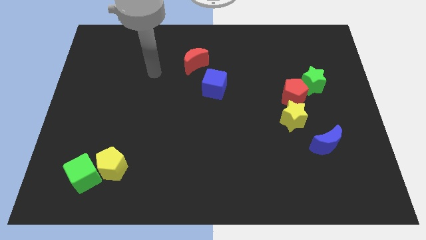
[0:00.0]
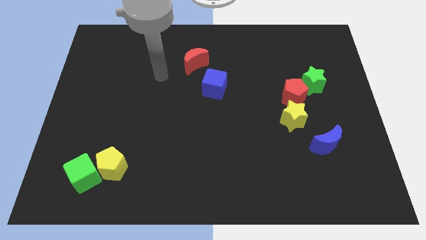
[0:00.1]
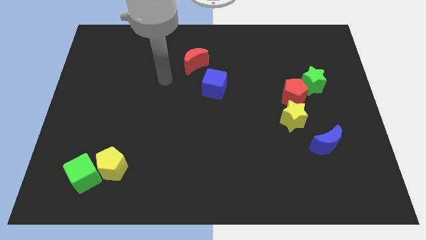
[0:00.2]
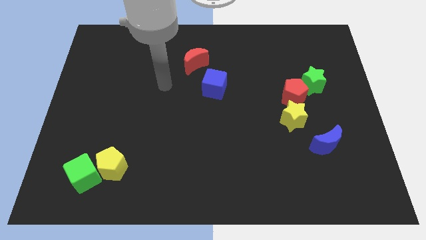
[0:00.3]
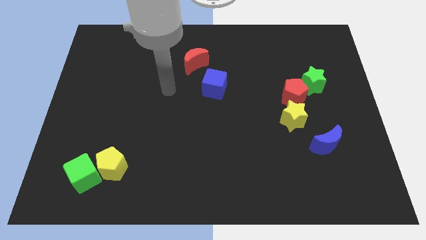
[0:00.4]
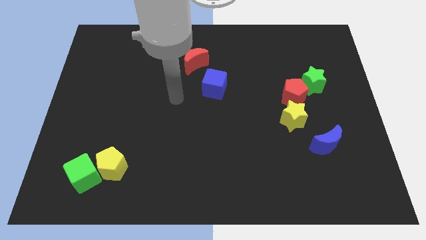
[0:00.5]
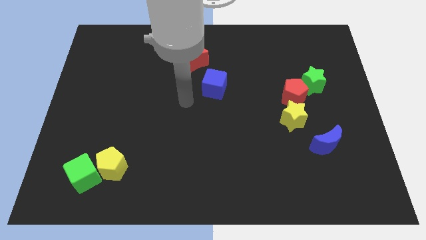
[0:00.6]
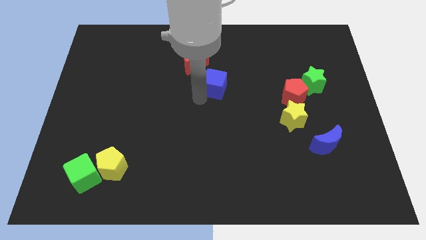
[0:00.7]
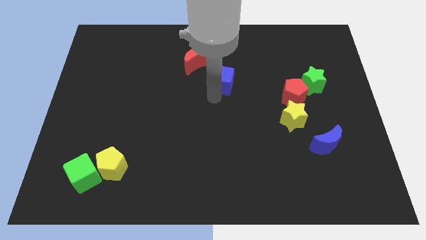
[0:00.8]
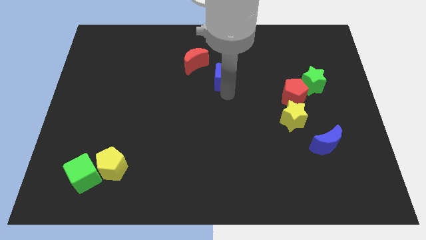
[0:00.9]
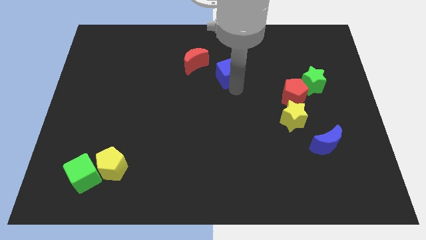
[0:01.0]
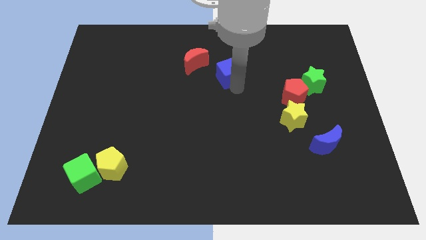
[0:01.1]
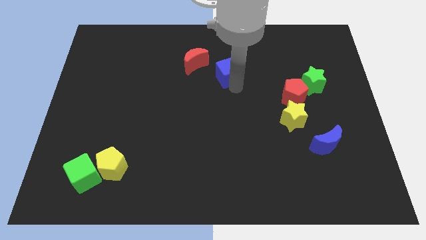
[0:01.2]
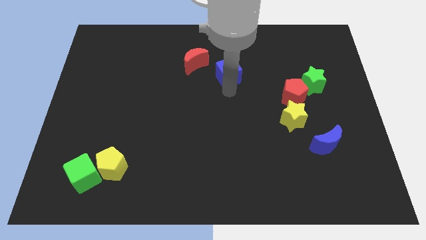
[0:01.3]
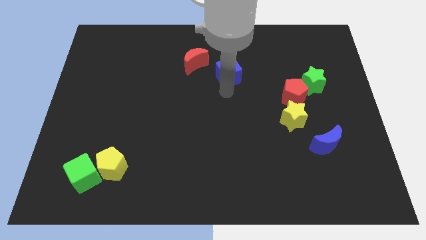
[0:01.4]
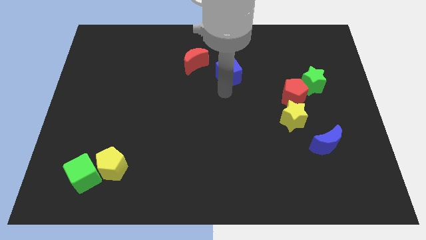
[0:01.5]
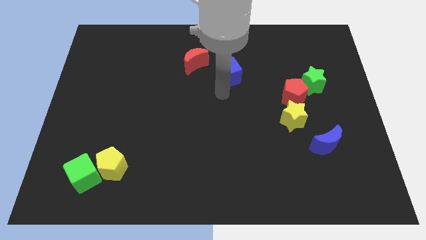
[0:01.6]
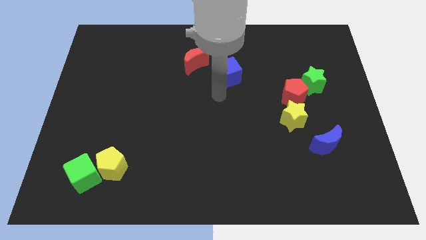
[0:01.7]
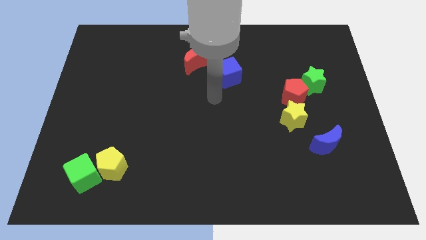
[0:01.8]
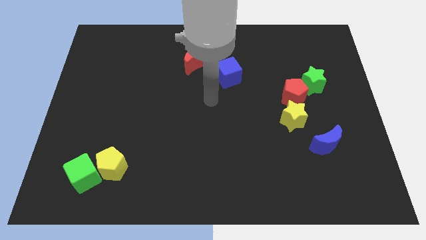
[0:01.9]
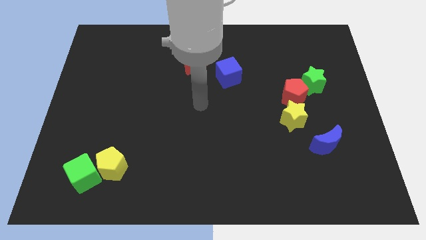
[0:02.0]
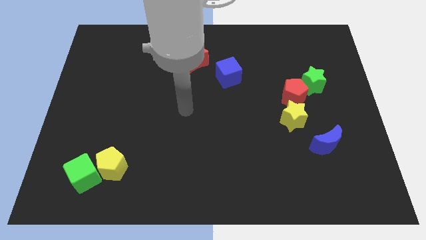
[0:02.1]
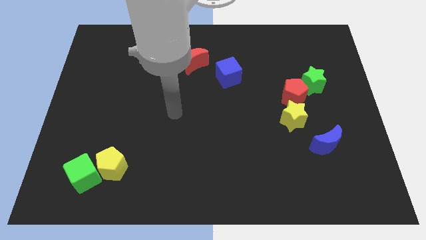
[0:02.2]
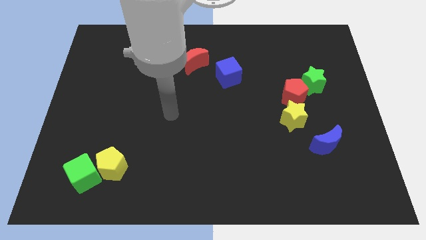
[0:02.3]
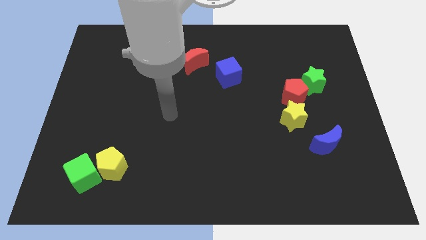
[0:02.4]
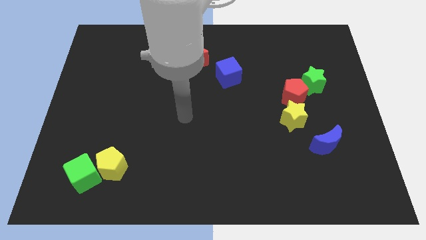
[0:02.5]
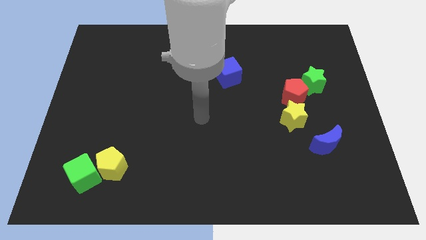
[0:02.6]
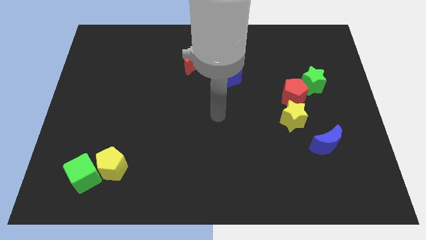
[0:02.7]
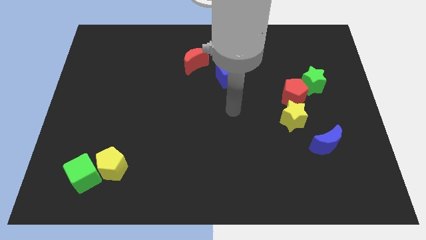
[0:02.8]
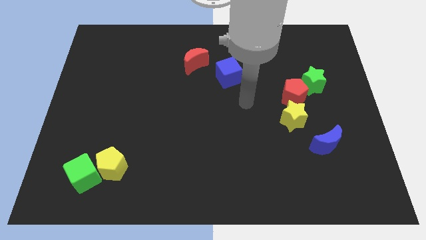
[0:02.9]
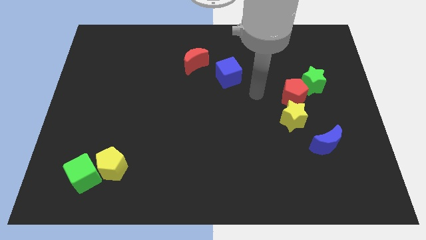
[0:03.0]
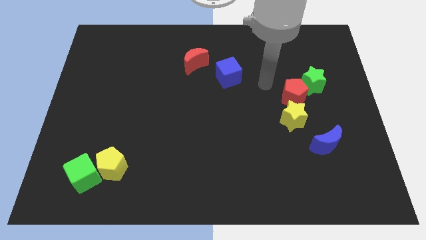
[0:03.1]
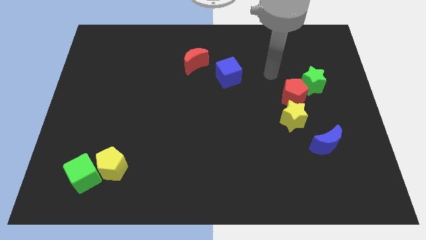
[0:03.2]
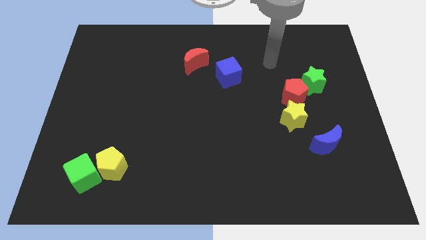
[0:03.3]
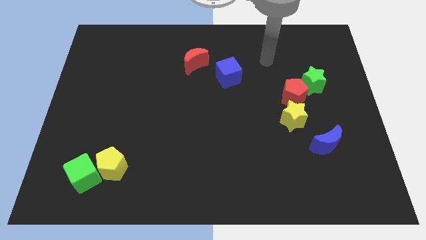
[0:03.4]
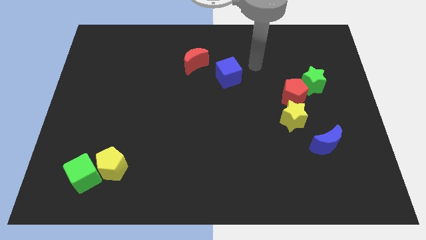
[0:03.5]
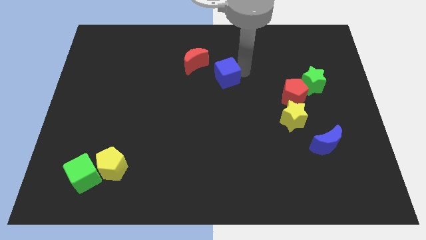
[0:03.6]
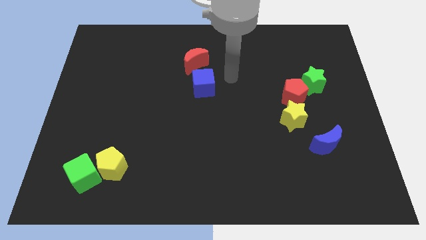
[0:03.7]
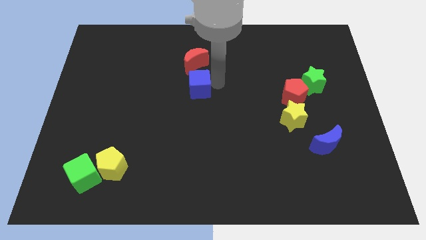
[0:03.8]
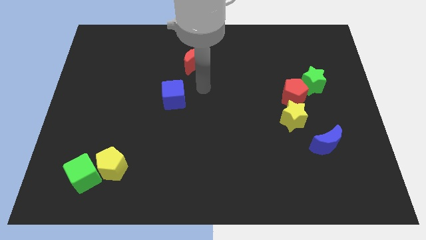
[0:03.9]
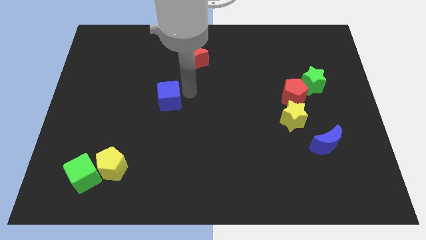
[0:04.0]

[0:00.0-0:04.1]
move the blue cube diagonally to the bottom left to the red moon

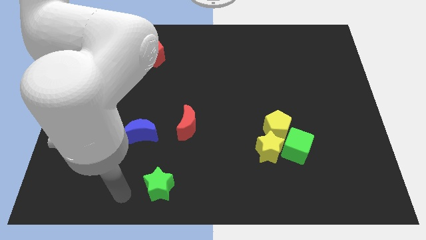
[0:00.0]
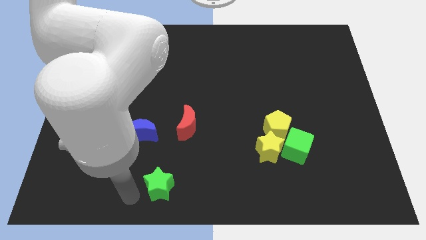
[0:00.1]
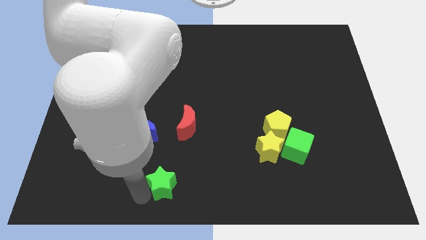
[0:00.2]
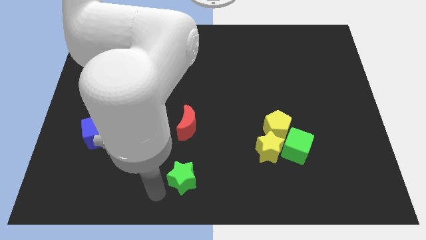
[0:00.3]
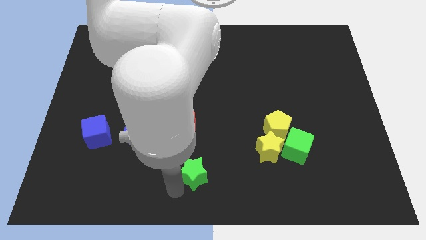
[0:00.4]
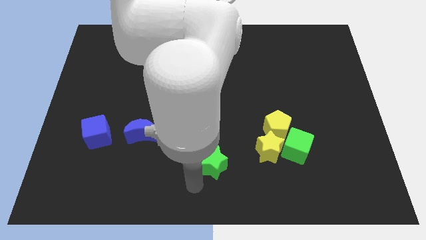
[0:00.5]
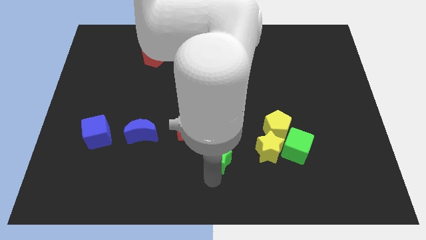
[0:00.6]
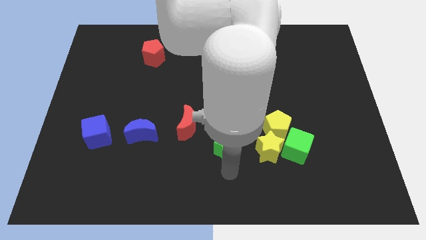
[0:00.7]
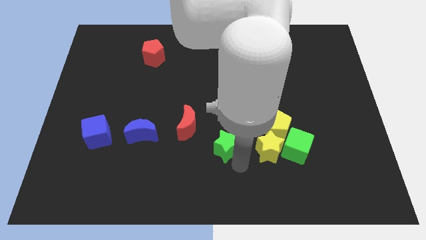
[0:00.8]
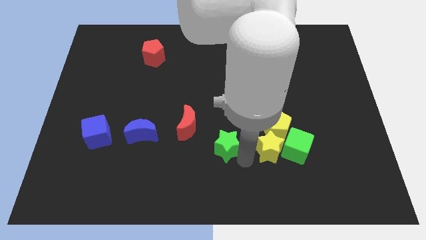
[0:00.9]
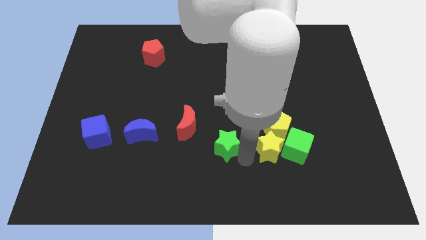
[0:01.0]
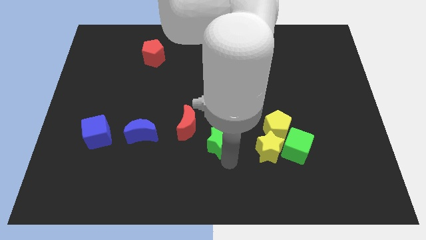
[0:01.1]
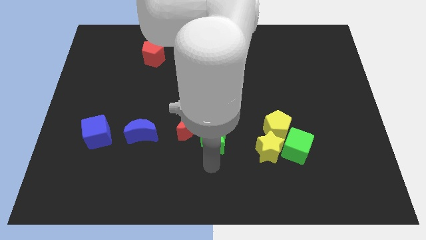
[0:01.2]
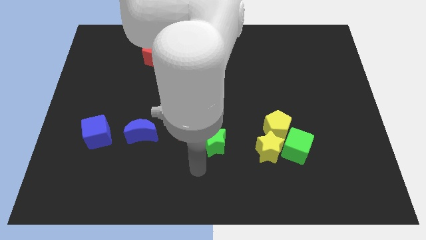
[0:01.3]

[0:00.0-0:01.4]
push the green star to the top

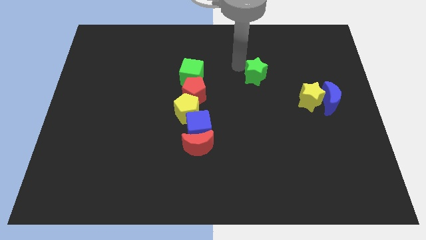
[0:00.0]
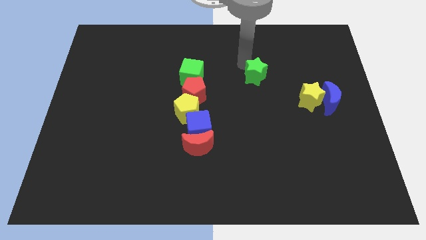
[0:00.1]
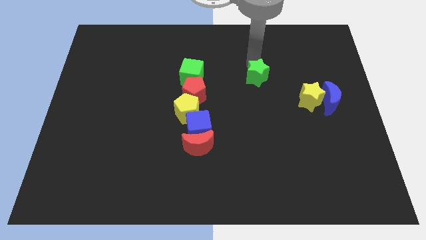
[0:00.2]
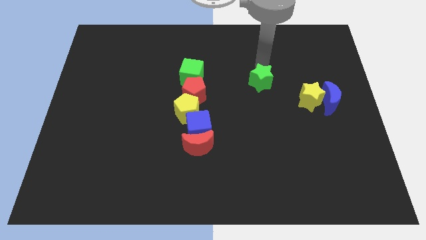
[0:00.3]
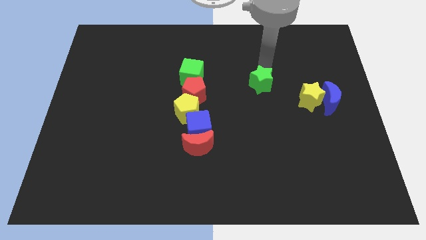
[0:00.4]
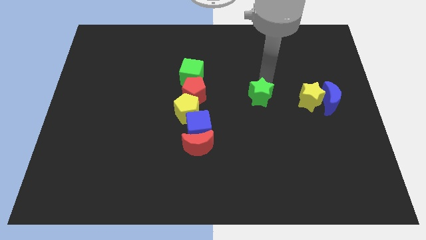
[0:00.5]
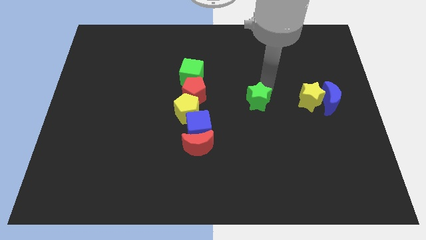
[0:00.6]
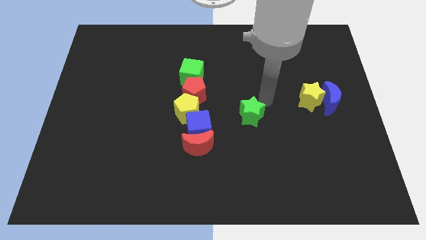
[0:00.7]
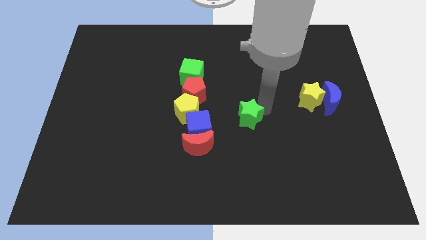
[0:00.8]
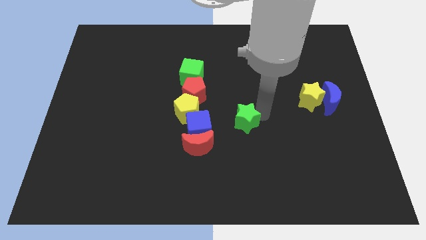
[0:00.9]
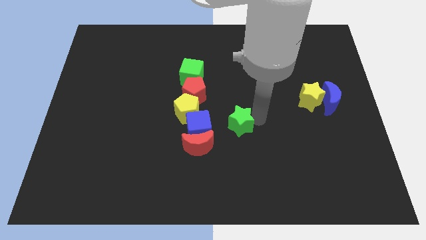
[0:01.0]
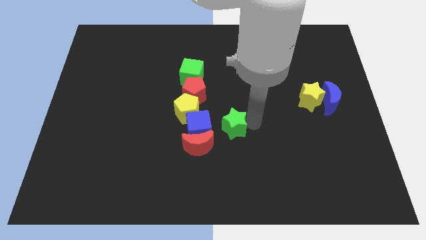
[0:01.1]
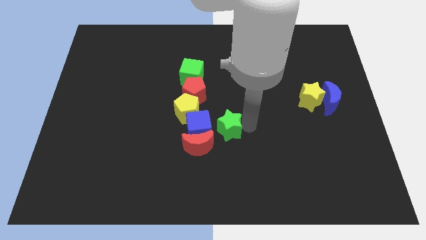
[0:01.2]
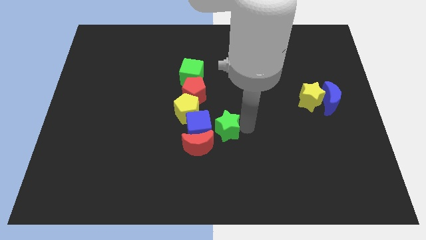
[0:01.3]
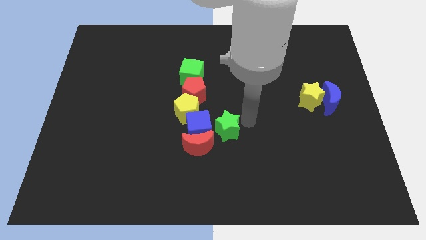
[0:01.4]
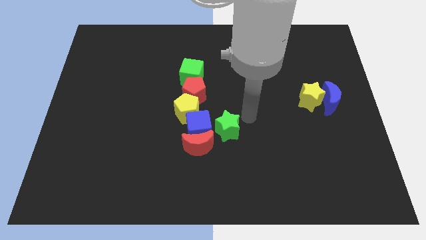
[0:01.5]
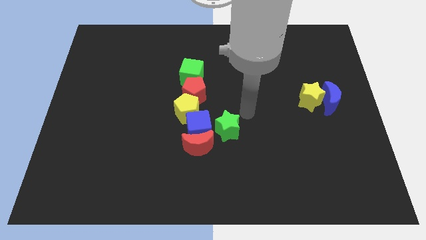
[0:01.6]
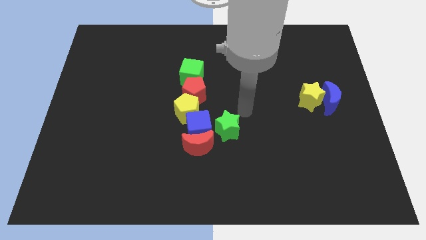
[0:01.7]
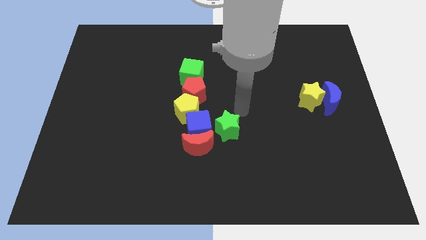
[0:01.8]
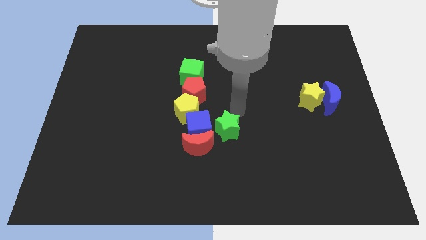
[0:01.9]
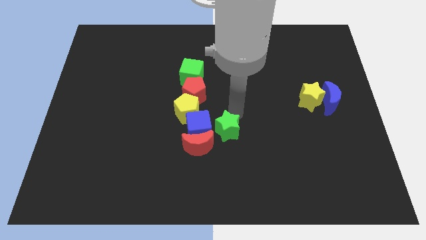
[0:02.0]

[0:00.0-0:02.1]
push the green star to the right of the blue cube

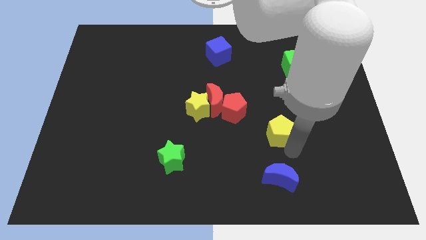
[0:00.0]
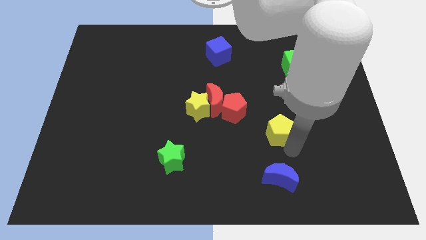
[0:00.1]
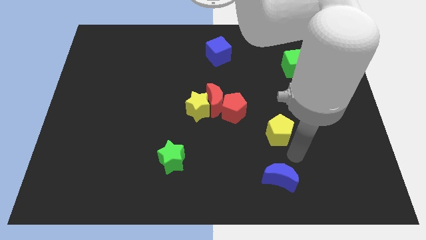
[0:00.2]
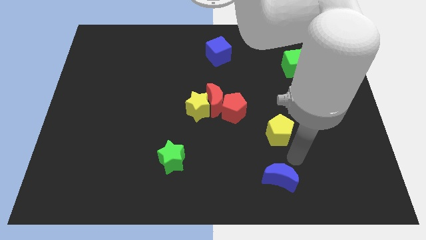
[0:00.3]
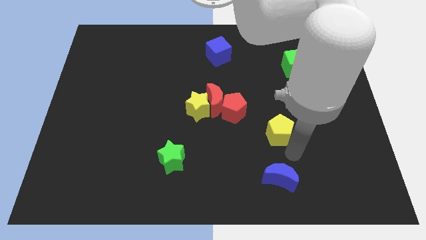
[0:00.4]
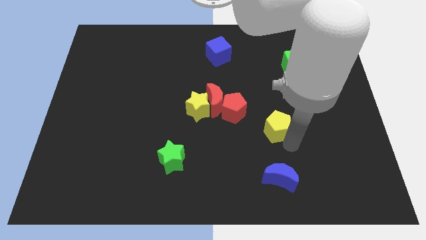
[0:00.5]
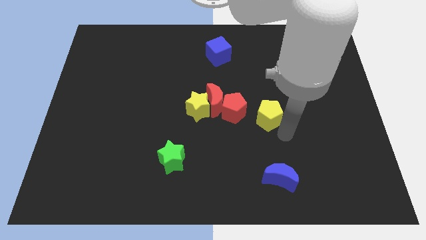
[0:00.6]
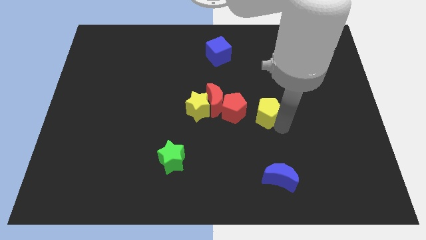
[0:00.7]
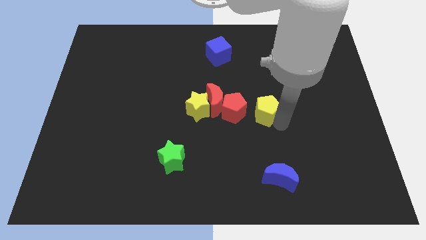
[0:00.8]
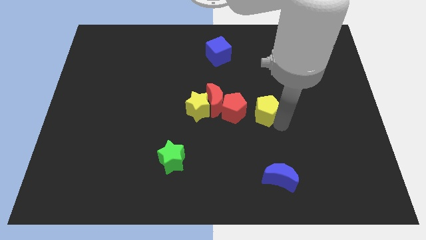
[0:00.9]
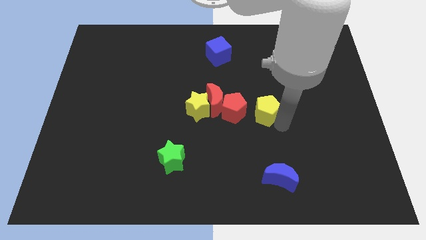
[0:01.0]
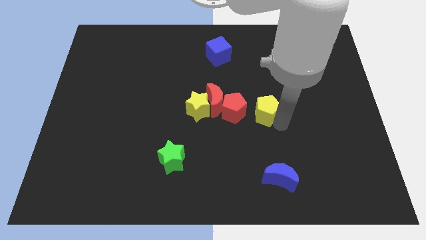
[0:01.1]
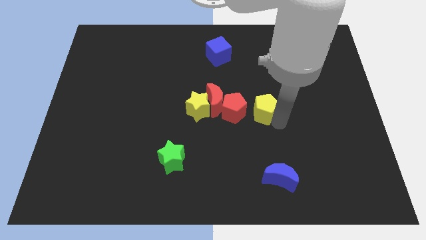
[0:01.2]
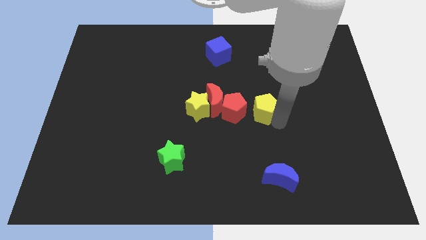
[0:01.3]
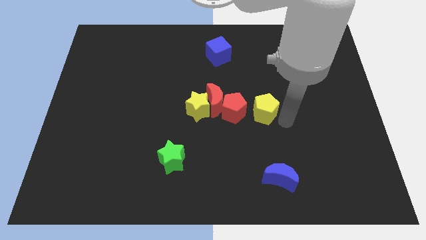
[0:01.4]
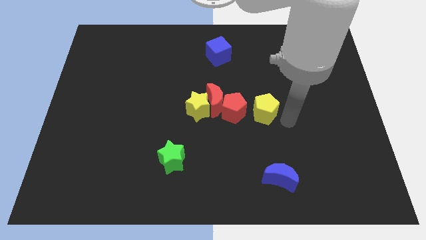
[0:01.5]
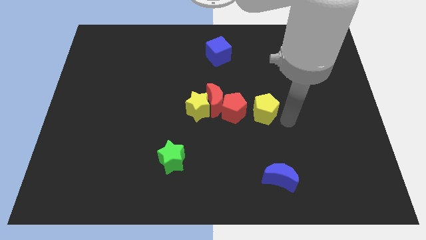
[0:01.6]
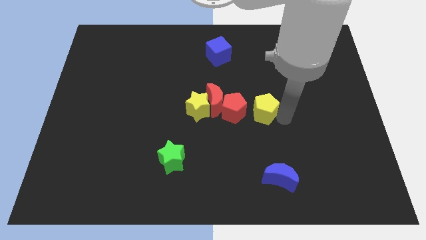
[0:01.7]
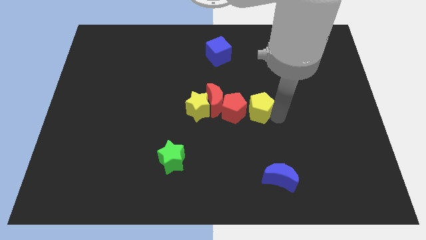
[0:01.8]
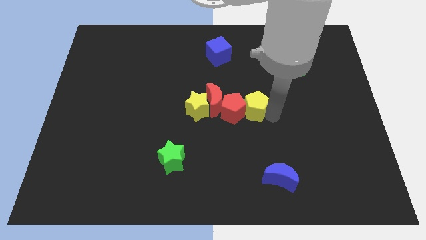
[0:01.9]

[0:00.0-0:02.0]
move the yellow pentagon right to the red pentagon
